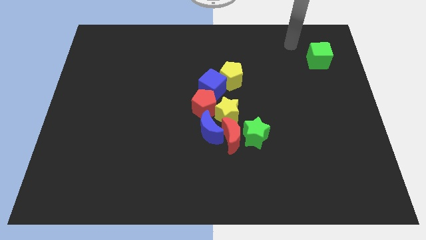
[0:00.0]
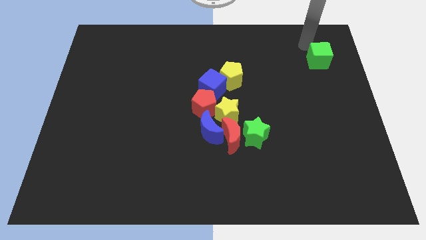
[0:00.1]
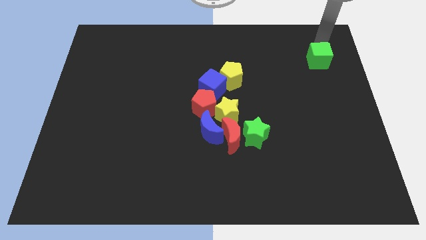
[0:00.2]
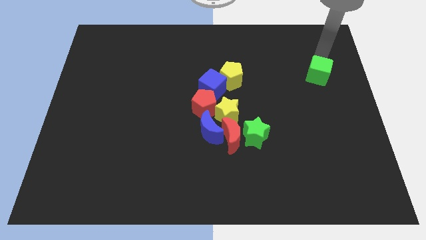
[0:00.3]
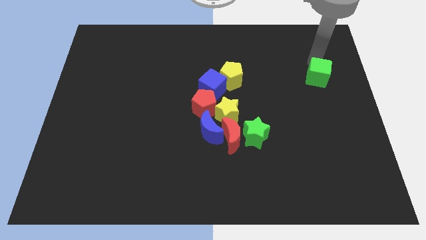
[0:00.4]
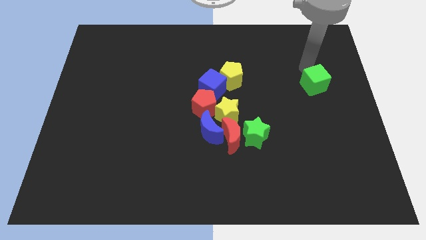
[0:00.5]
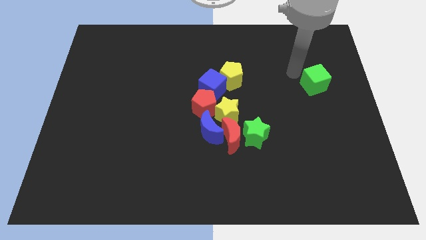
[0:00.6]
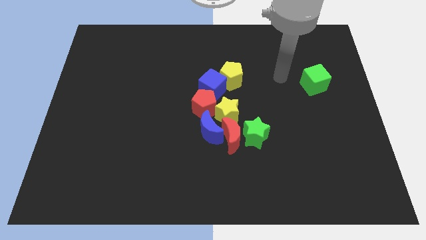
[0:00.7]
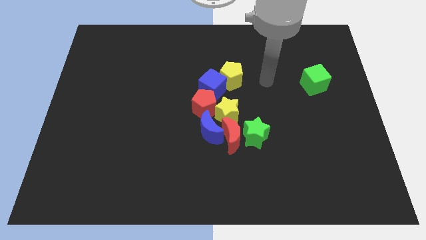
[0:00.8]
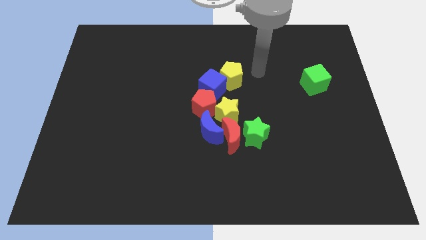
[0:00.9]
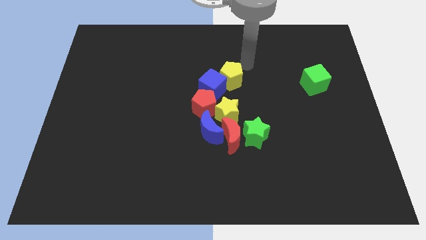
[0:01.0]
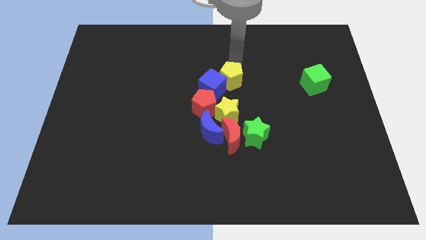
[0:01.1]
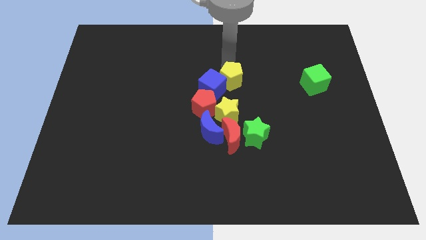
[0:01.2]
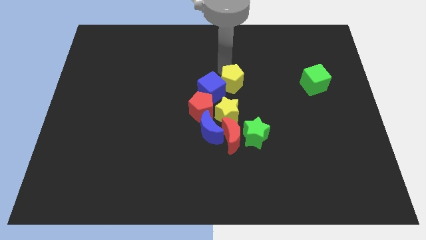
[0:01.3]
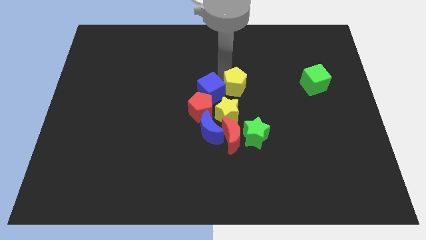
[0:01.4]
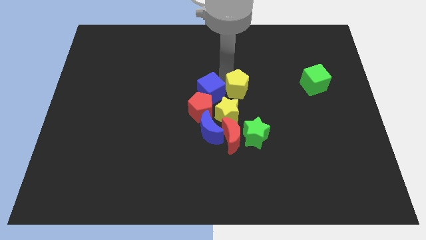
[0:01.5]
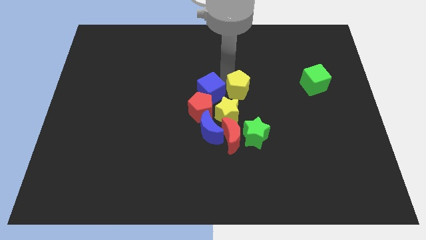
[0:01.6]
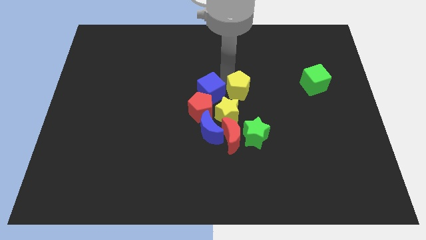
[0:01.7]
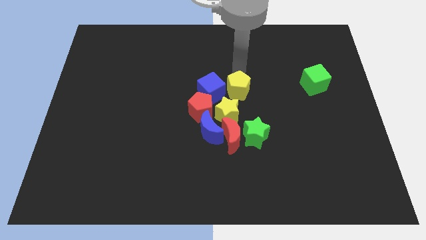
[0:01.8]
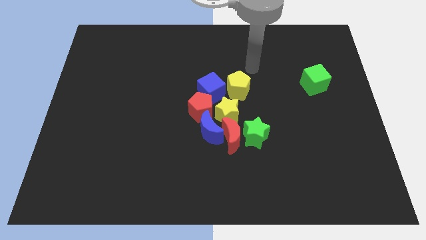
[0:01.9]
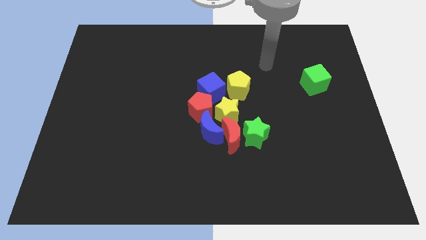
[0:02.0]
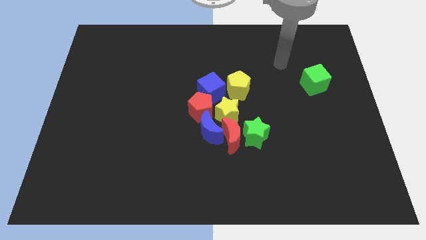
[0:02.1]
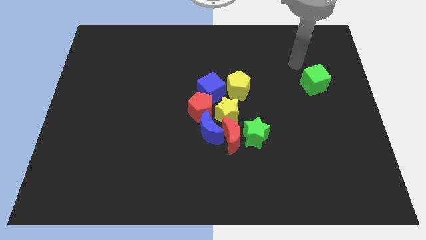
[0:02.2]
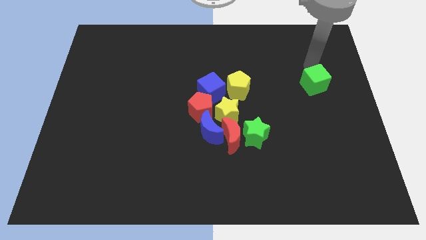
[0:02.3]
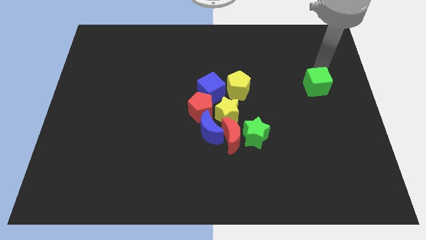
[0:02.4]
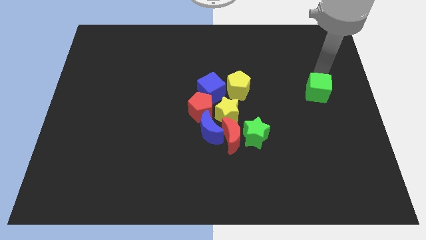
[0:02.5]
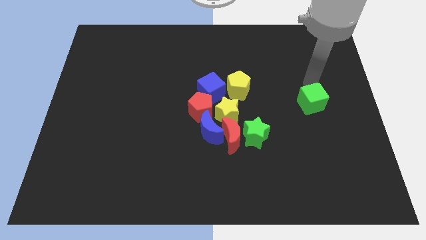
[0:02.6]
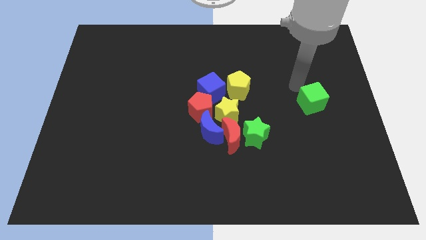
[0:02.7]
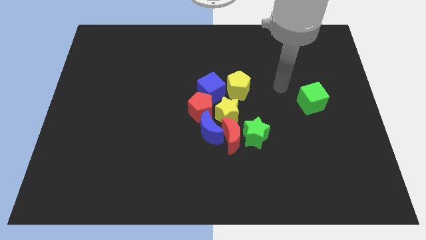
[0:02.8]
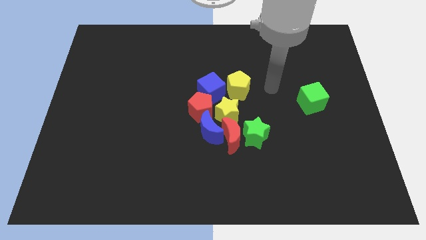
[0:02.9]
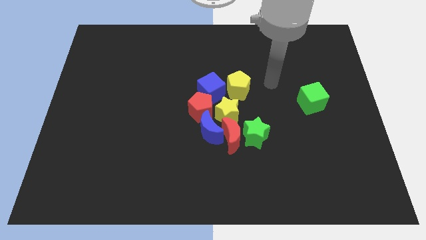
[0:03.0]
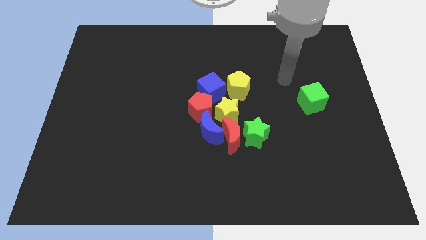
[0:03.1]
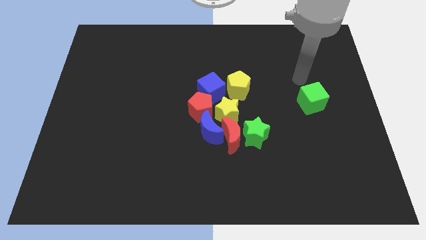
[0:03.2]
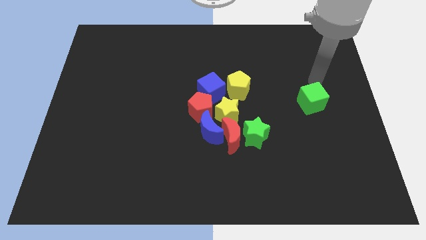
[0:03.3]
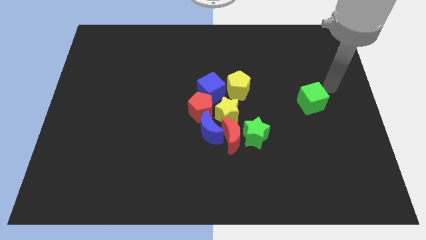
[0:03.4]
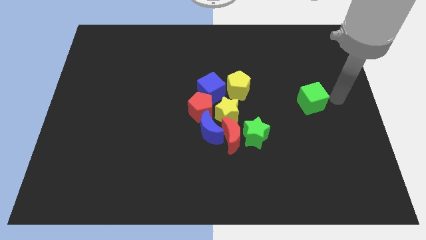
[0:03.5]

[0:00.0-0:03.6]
place the green cube to the right of the yellow star

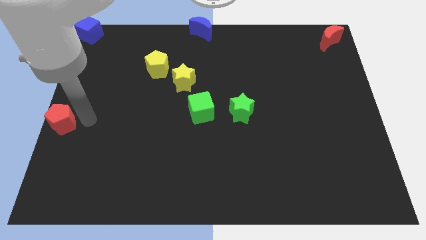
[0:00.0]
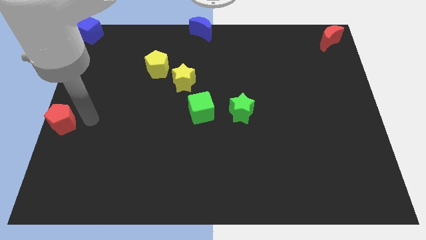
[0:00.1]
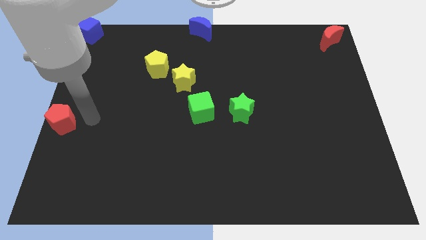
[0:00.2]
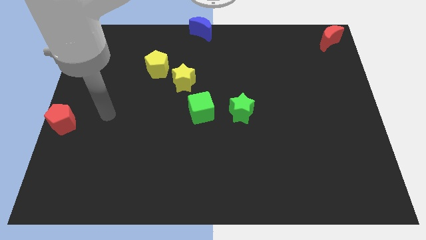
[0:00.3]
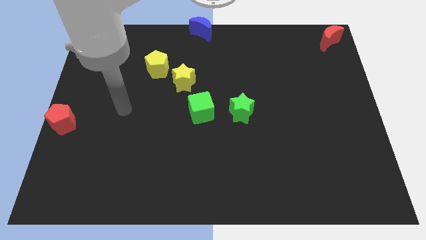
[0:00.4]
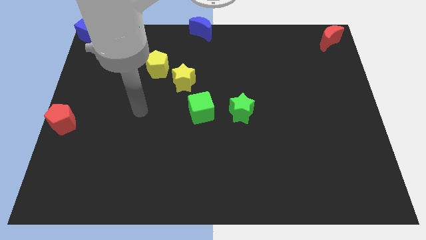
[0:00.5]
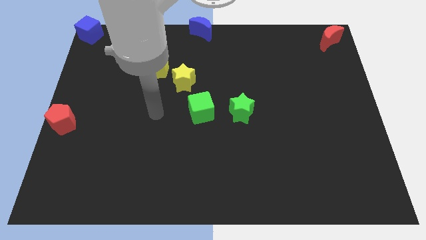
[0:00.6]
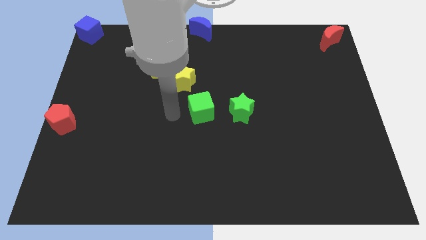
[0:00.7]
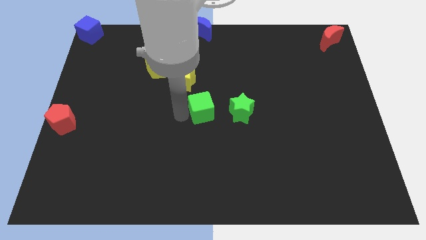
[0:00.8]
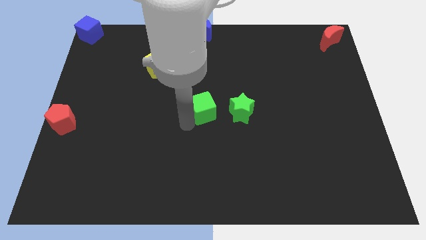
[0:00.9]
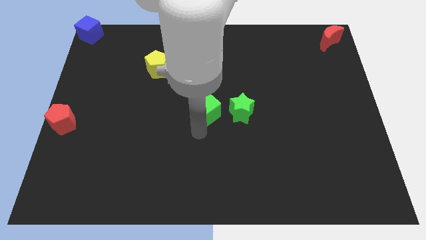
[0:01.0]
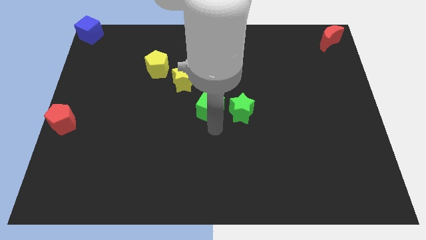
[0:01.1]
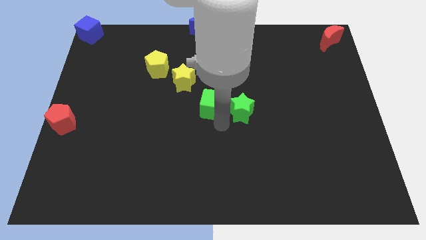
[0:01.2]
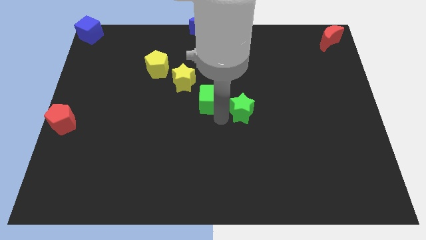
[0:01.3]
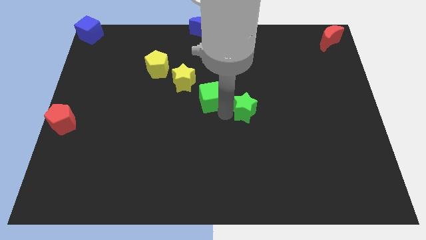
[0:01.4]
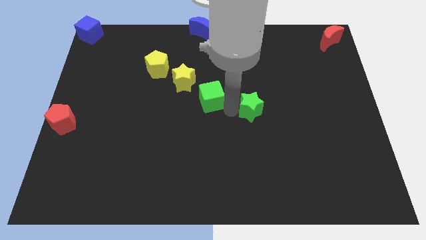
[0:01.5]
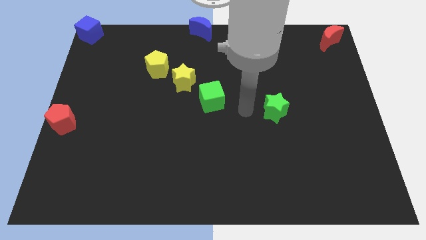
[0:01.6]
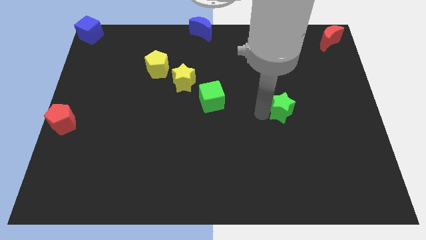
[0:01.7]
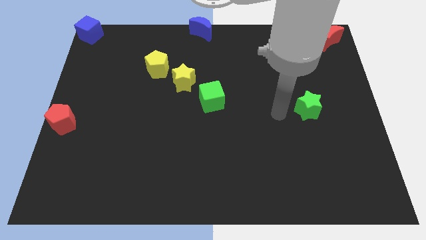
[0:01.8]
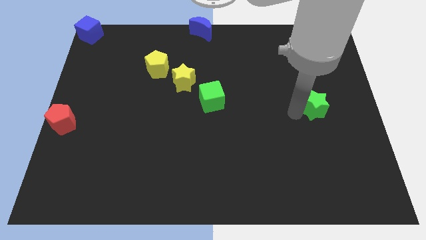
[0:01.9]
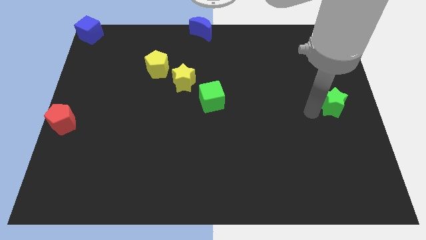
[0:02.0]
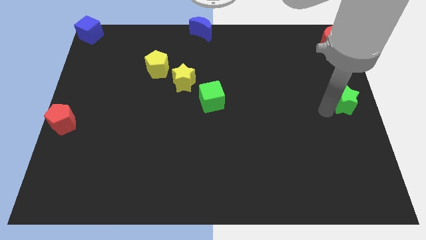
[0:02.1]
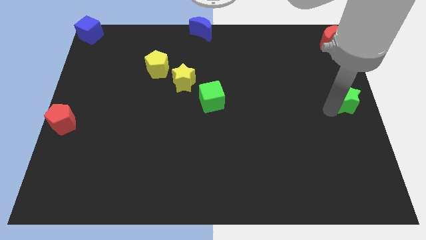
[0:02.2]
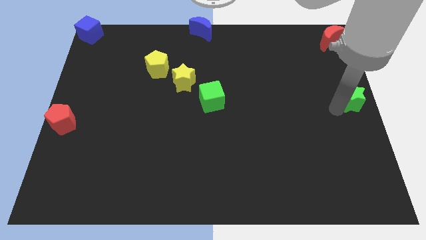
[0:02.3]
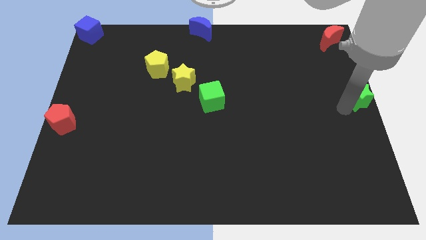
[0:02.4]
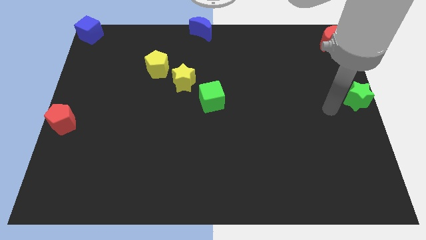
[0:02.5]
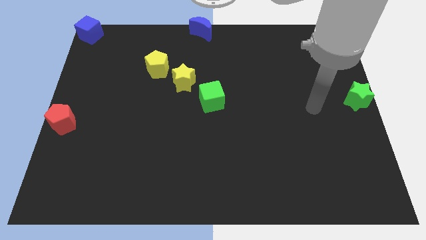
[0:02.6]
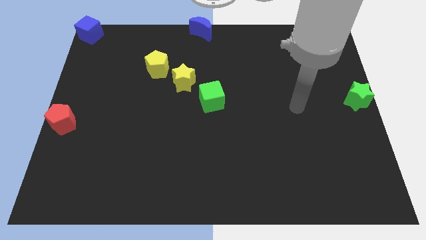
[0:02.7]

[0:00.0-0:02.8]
push the green star to the middle right of the board

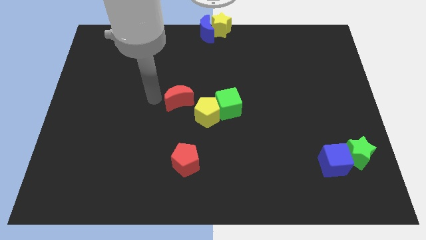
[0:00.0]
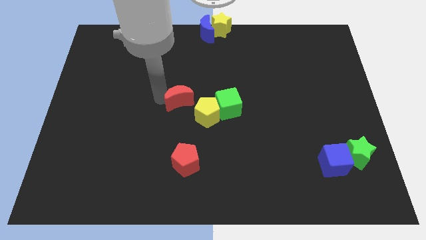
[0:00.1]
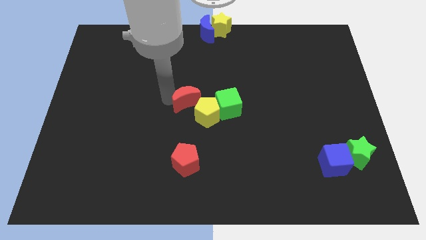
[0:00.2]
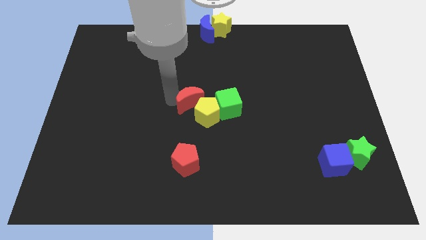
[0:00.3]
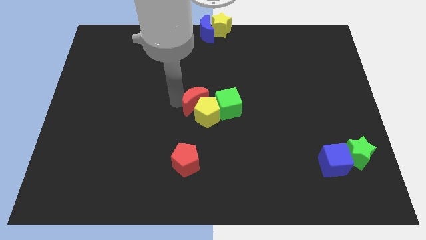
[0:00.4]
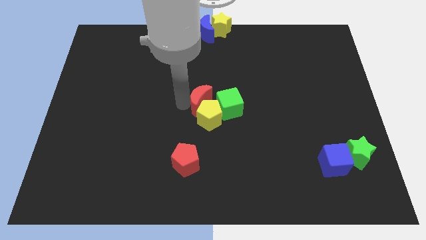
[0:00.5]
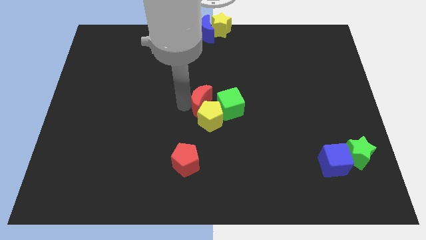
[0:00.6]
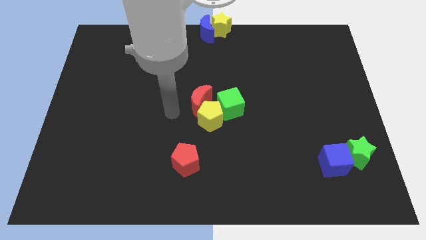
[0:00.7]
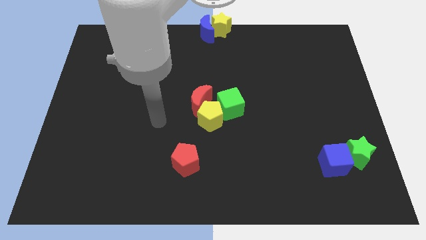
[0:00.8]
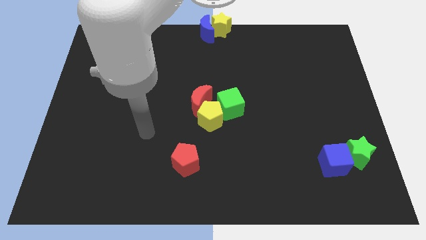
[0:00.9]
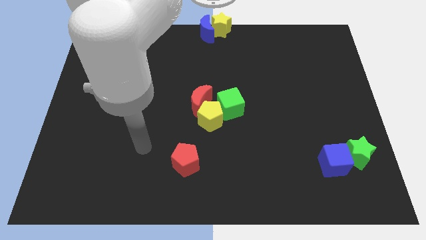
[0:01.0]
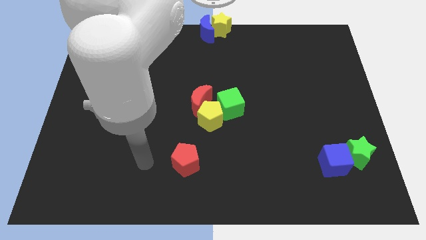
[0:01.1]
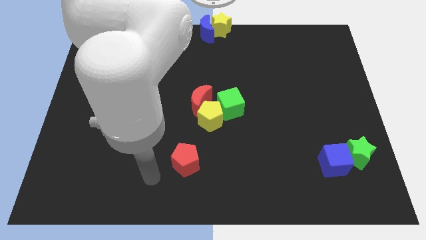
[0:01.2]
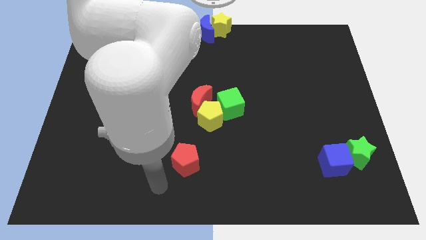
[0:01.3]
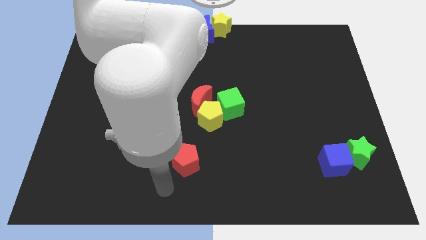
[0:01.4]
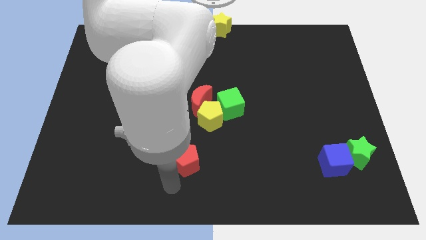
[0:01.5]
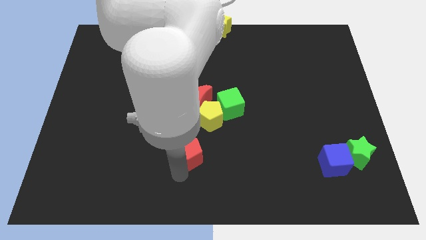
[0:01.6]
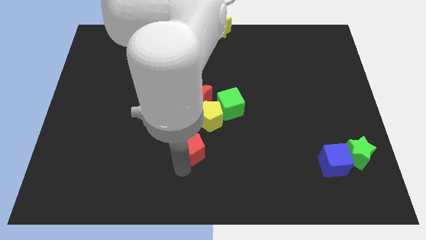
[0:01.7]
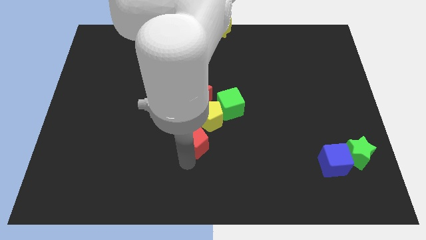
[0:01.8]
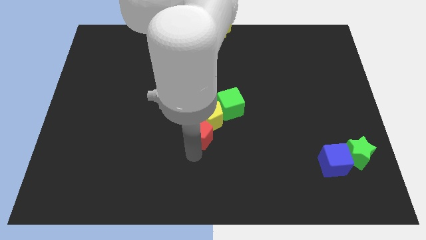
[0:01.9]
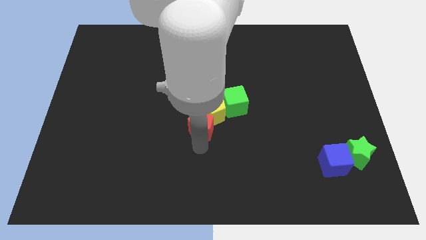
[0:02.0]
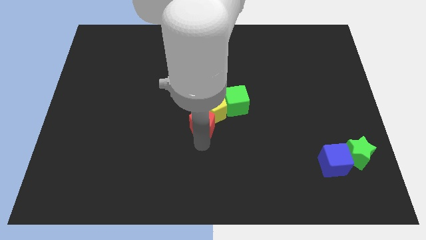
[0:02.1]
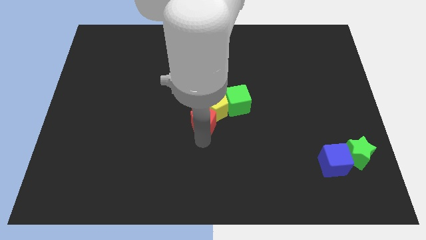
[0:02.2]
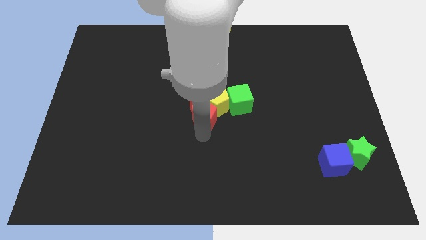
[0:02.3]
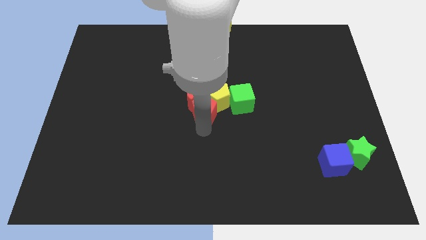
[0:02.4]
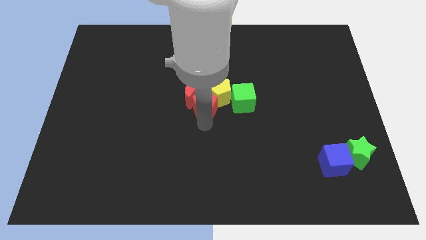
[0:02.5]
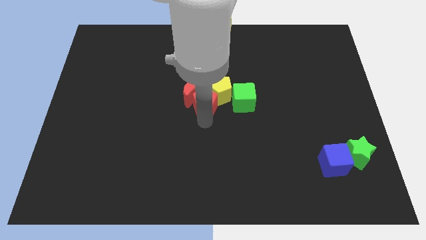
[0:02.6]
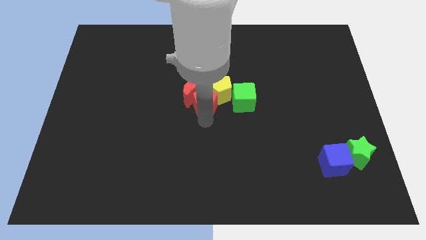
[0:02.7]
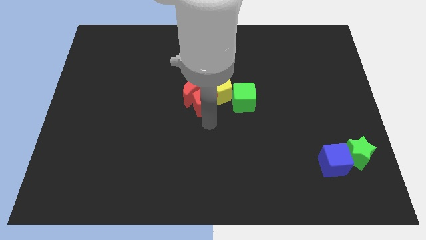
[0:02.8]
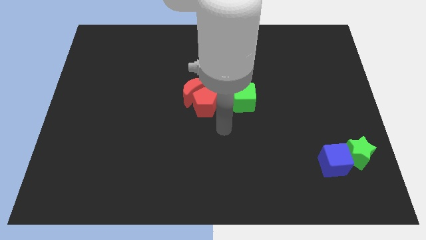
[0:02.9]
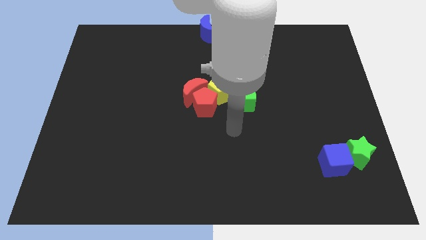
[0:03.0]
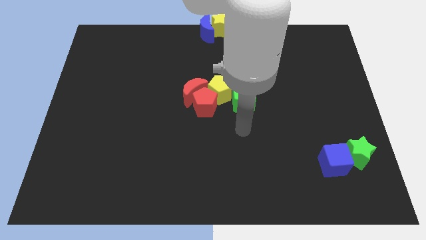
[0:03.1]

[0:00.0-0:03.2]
push the red blocks and yellow pentagon to the center of the board
